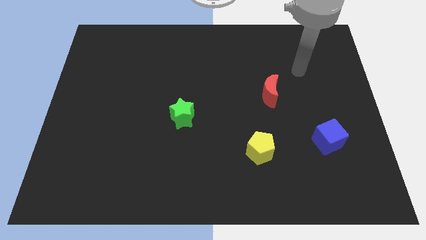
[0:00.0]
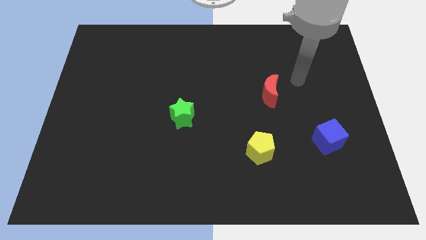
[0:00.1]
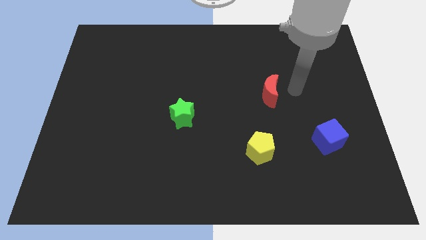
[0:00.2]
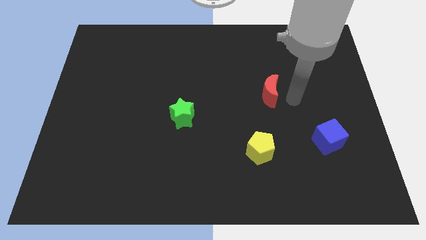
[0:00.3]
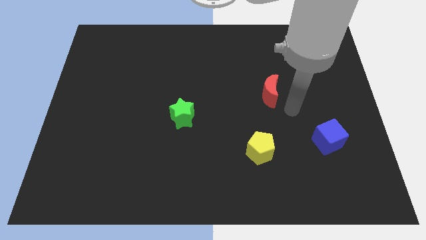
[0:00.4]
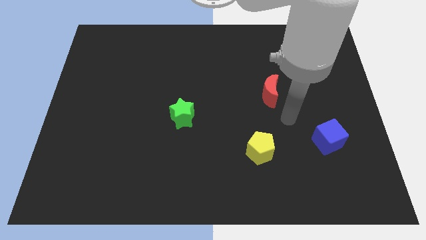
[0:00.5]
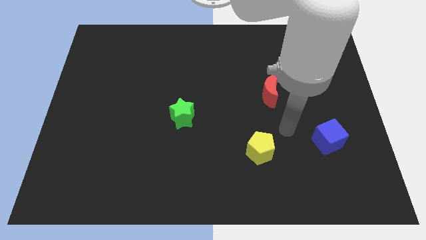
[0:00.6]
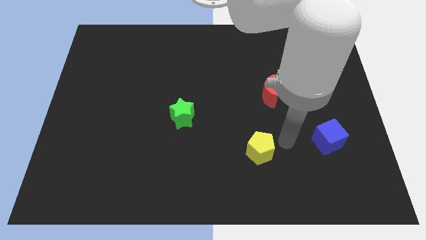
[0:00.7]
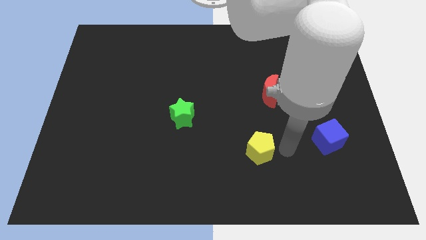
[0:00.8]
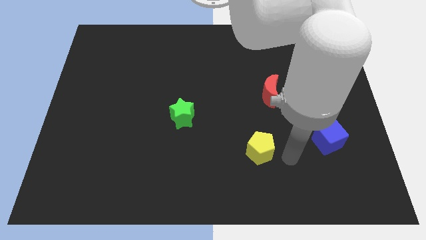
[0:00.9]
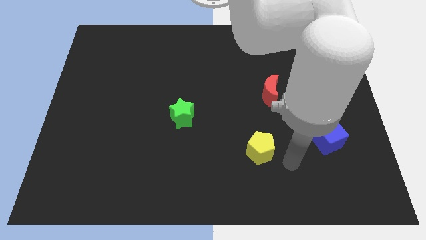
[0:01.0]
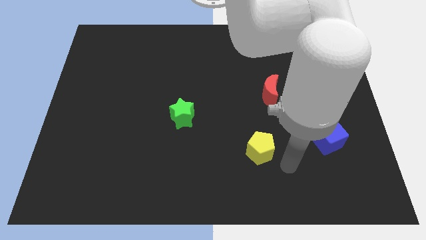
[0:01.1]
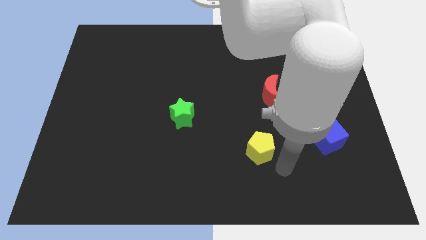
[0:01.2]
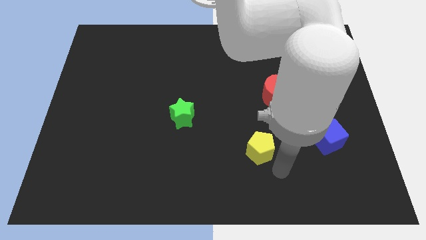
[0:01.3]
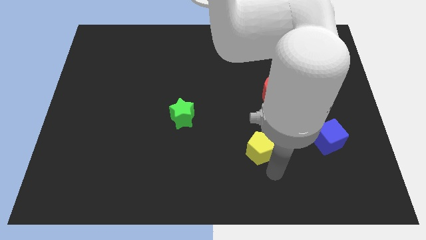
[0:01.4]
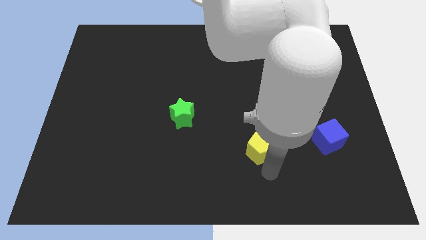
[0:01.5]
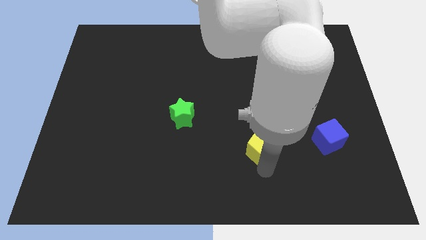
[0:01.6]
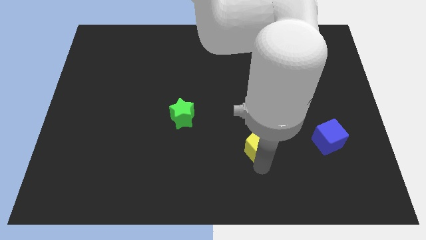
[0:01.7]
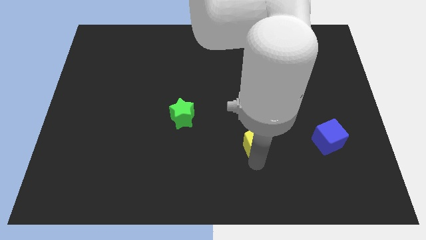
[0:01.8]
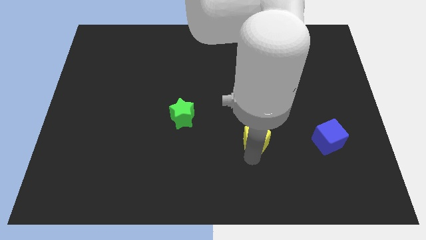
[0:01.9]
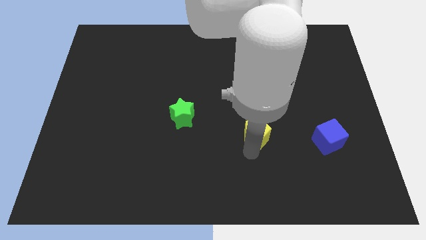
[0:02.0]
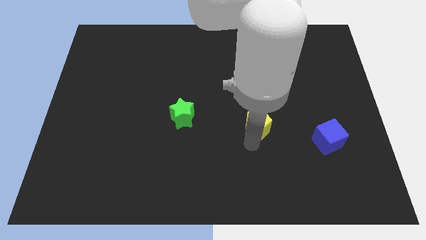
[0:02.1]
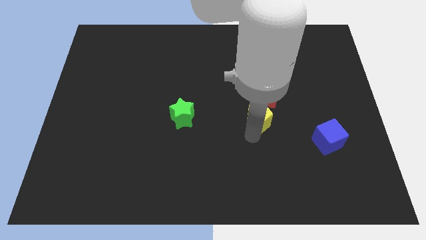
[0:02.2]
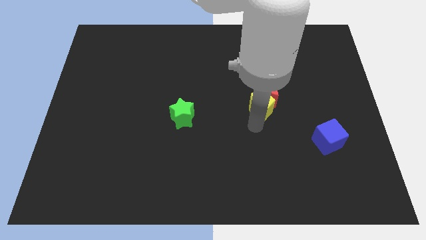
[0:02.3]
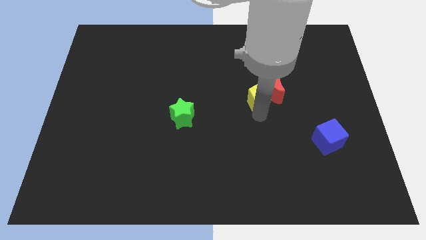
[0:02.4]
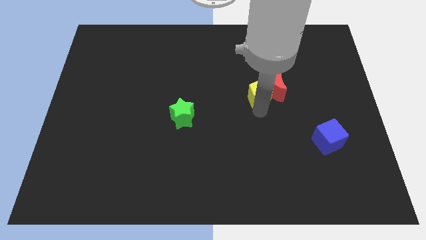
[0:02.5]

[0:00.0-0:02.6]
push the pentagon towards the red moon

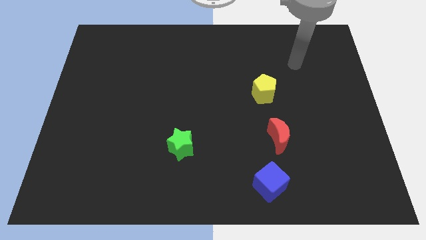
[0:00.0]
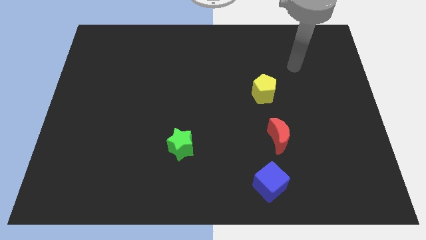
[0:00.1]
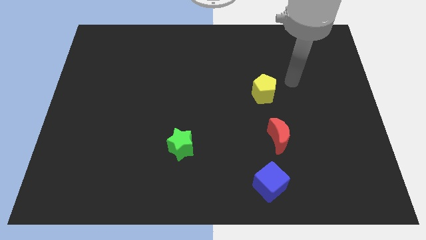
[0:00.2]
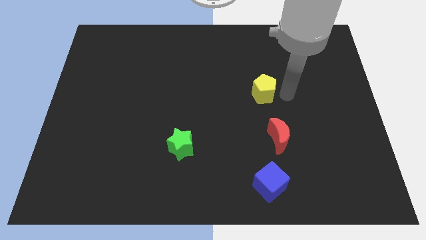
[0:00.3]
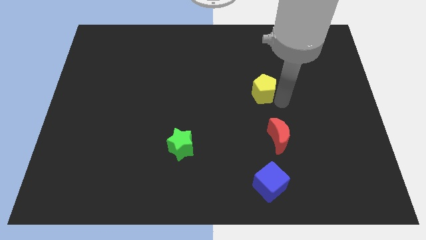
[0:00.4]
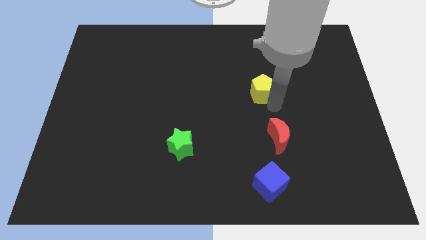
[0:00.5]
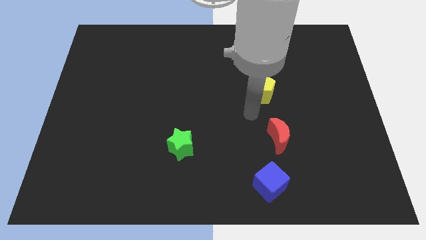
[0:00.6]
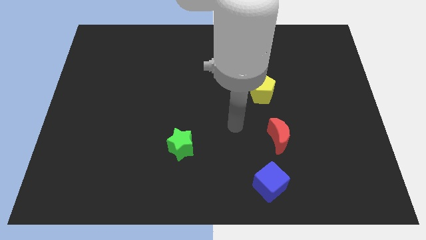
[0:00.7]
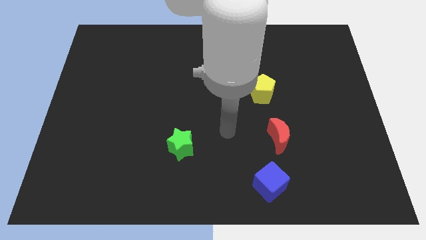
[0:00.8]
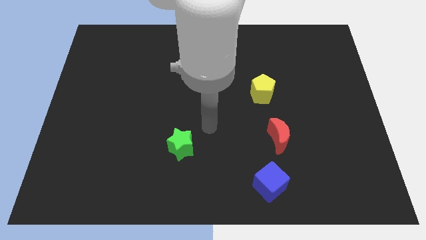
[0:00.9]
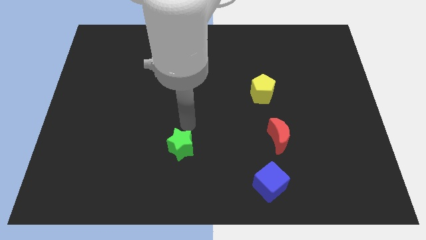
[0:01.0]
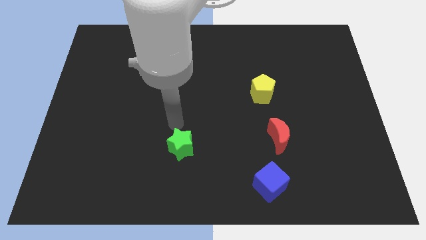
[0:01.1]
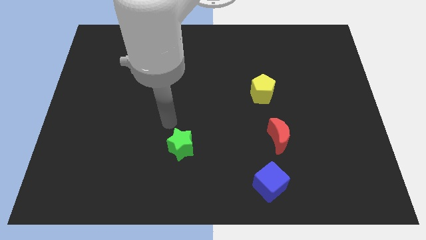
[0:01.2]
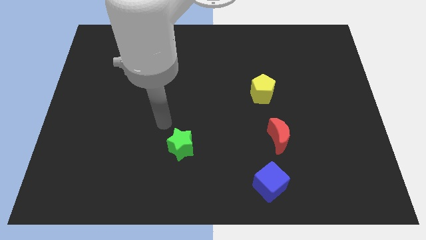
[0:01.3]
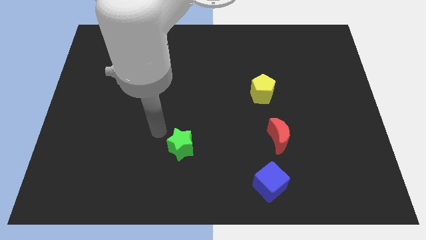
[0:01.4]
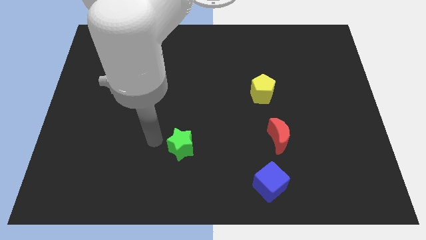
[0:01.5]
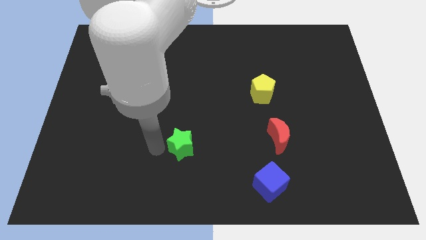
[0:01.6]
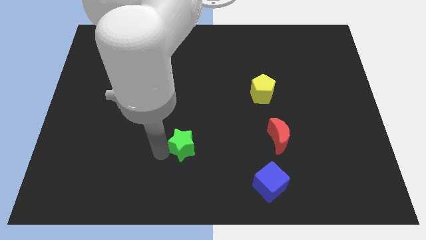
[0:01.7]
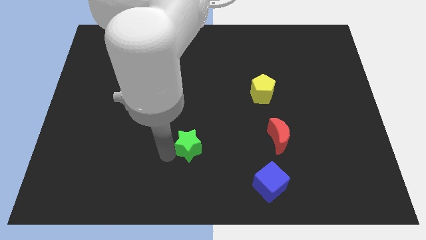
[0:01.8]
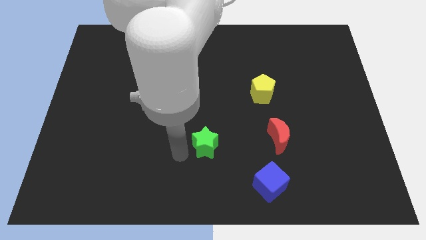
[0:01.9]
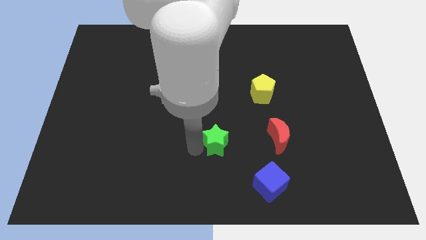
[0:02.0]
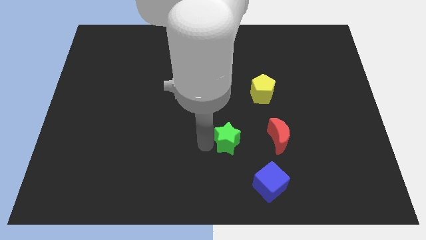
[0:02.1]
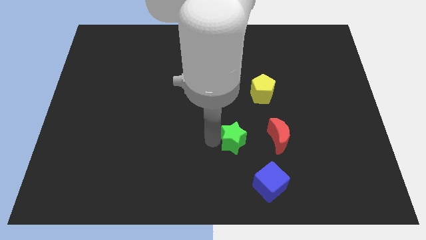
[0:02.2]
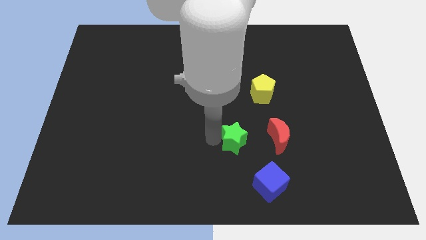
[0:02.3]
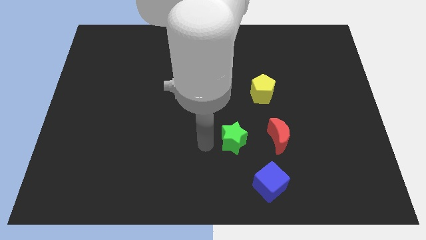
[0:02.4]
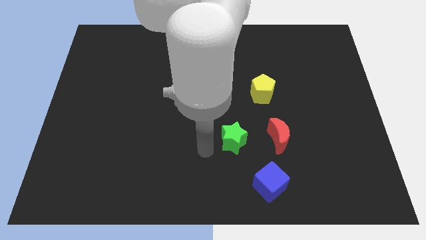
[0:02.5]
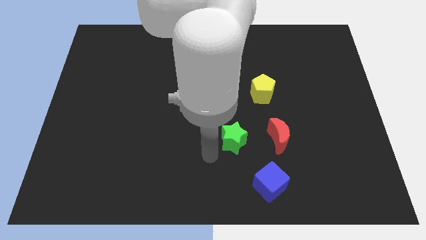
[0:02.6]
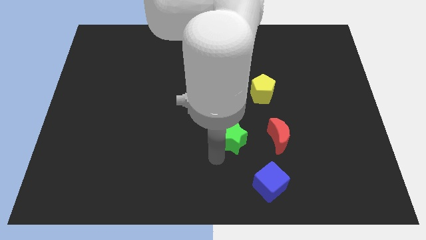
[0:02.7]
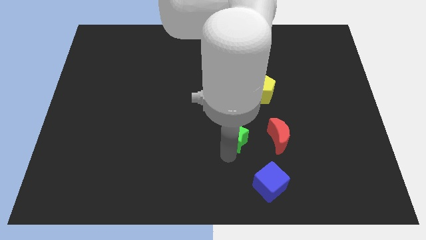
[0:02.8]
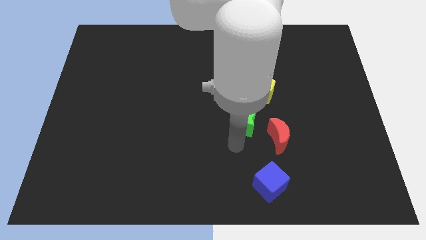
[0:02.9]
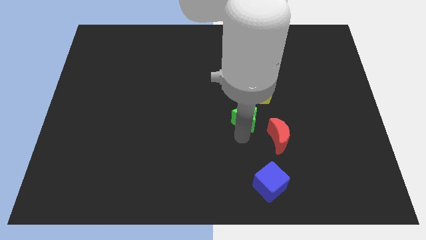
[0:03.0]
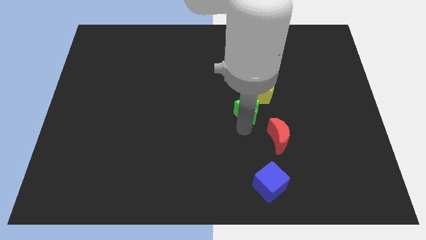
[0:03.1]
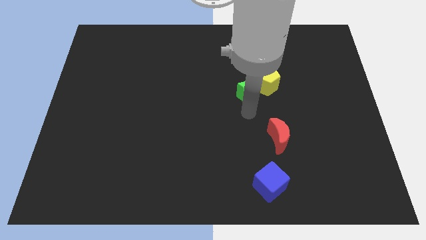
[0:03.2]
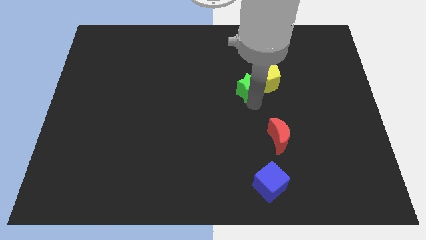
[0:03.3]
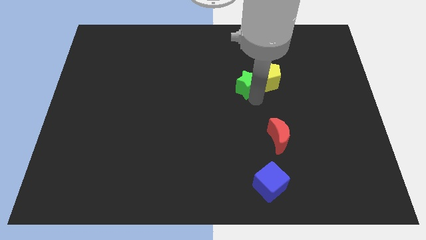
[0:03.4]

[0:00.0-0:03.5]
move the green star to the pentagon

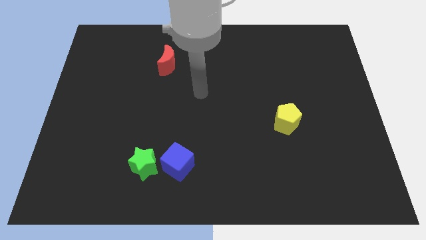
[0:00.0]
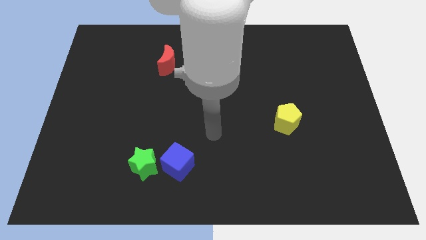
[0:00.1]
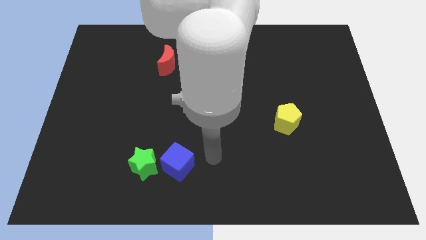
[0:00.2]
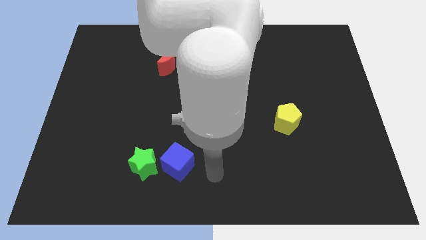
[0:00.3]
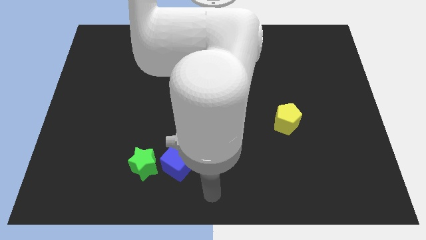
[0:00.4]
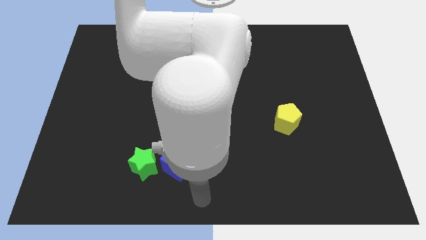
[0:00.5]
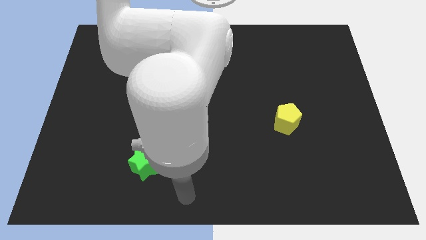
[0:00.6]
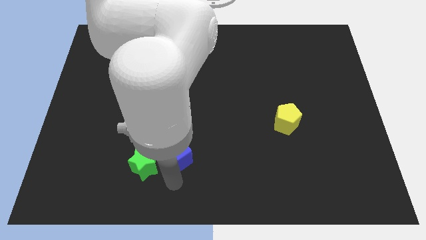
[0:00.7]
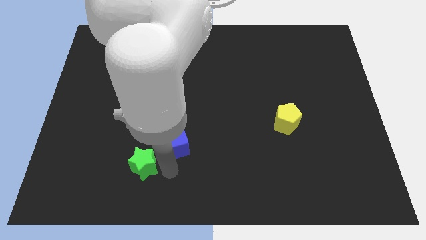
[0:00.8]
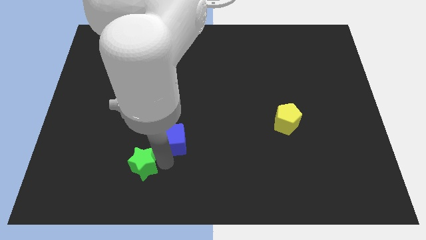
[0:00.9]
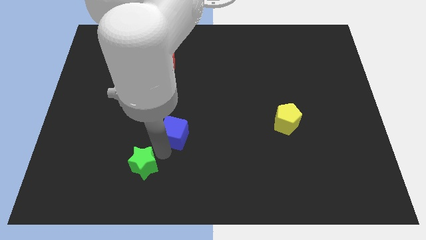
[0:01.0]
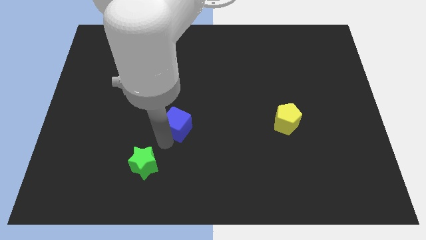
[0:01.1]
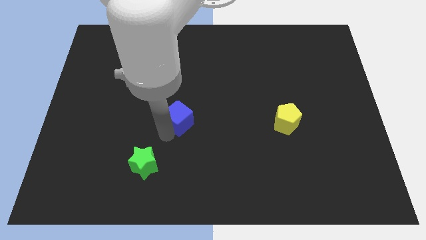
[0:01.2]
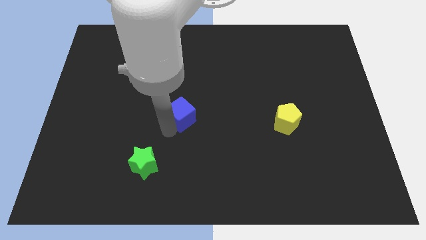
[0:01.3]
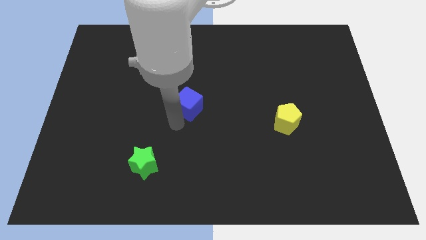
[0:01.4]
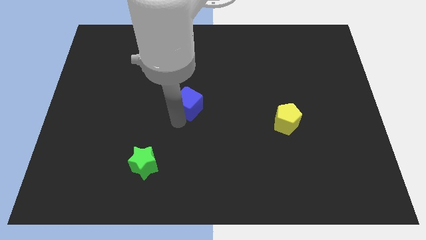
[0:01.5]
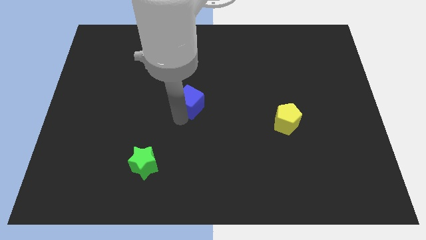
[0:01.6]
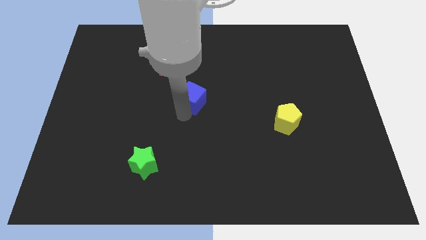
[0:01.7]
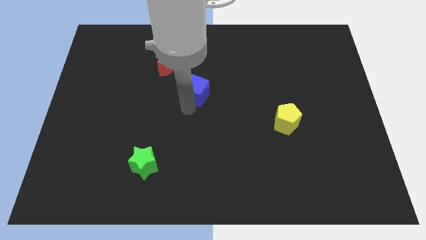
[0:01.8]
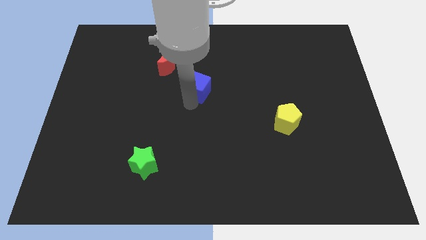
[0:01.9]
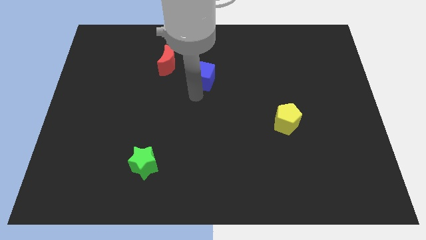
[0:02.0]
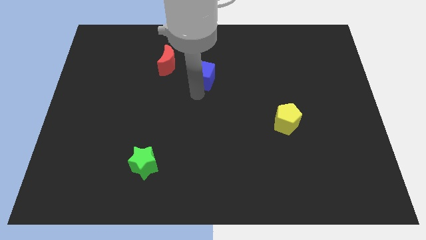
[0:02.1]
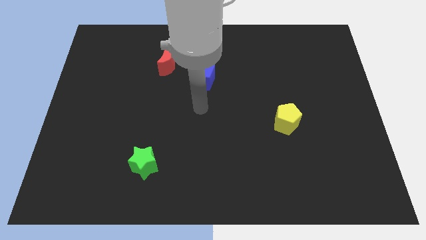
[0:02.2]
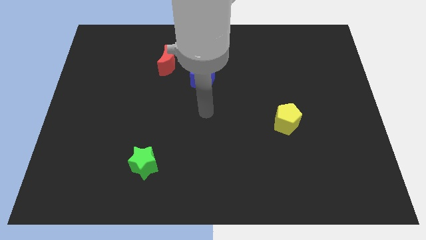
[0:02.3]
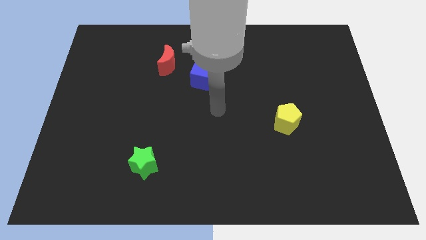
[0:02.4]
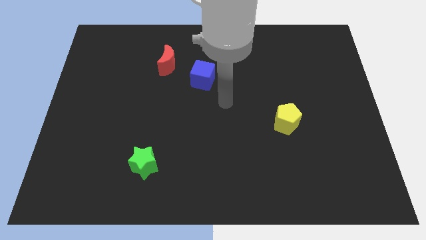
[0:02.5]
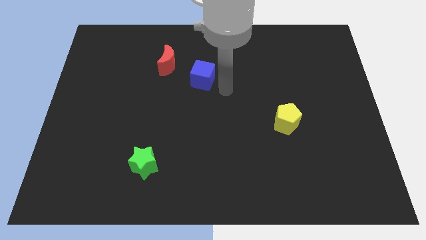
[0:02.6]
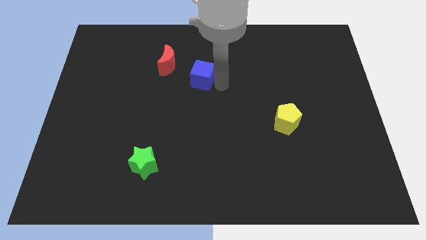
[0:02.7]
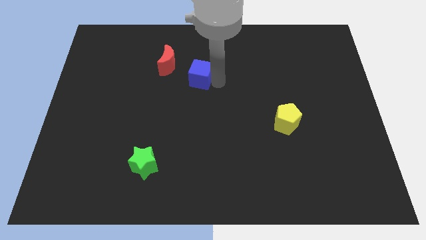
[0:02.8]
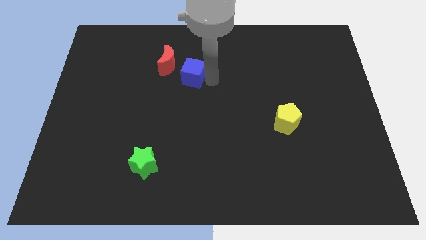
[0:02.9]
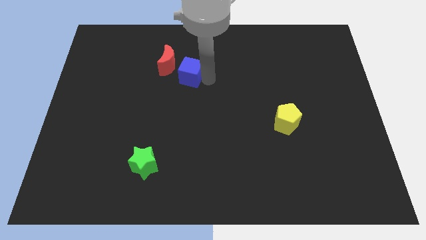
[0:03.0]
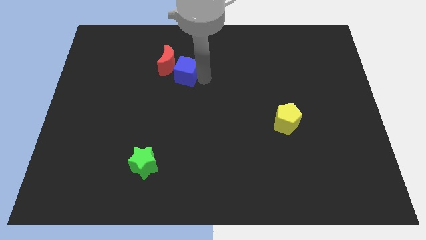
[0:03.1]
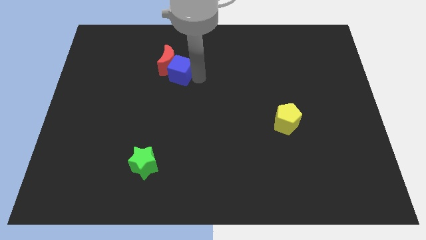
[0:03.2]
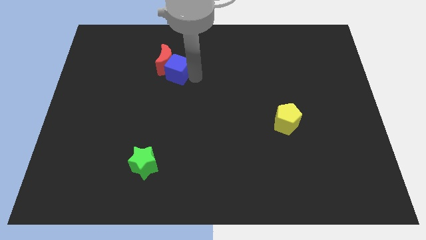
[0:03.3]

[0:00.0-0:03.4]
slide the cube towards the red block
